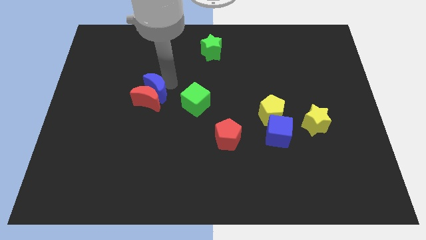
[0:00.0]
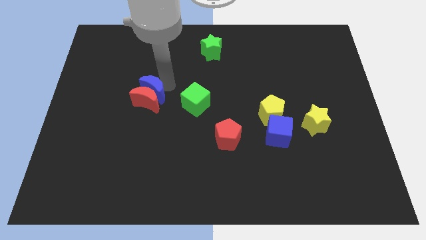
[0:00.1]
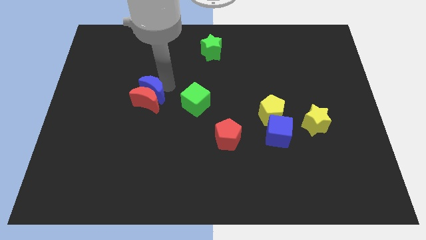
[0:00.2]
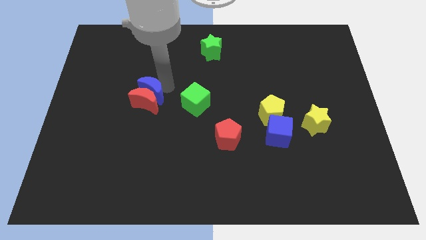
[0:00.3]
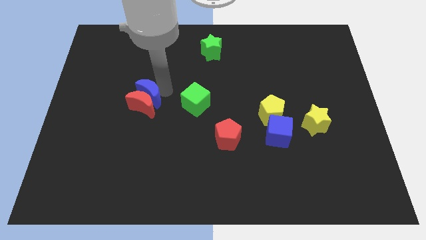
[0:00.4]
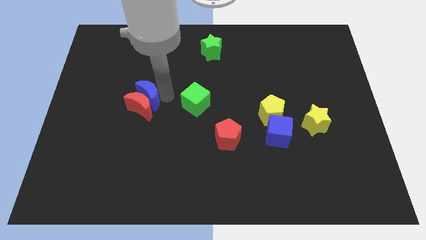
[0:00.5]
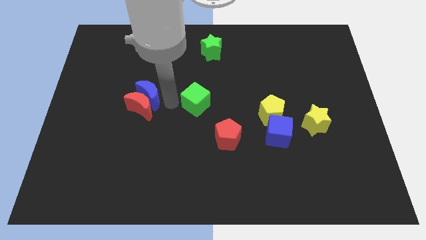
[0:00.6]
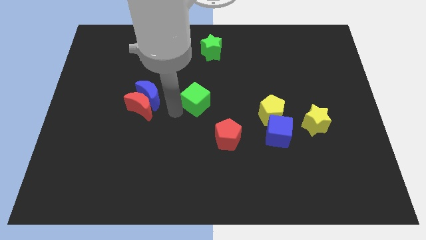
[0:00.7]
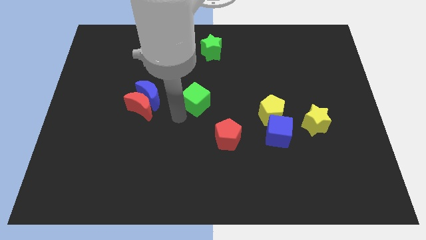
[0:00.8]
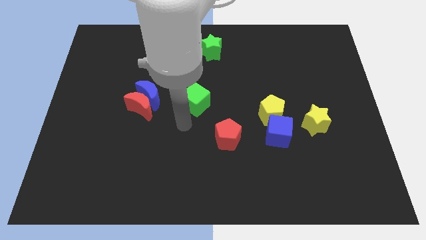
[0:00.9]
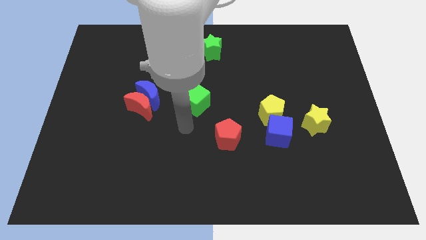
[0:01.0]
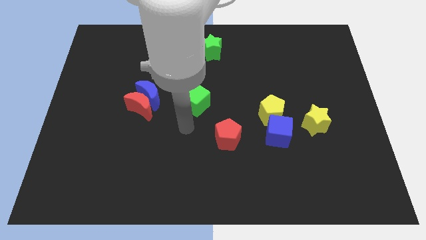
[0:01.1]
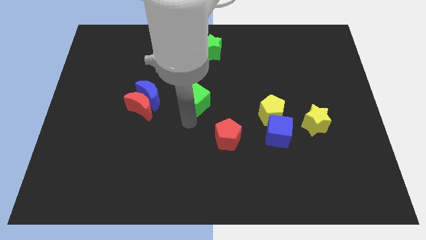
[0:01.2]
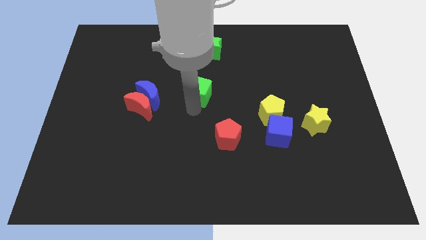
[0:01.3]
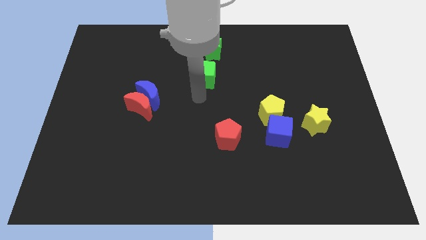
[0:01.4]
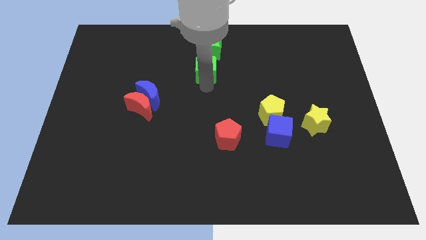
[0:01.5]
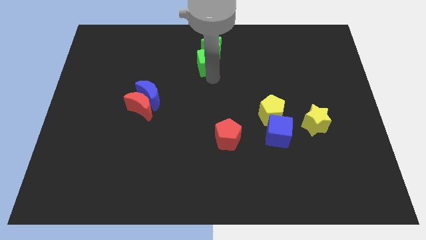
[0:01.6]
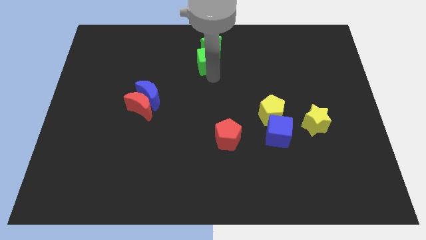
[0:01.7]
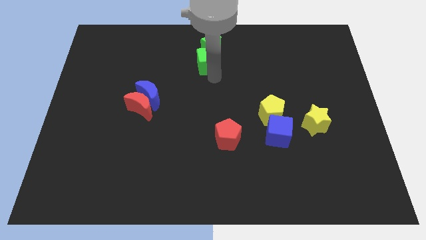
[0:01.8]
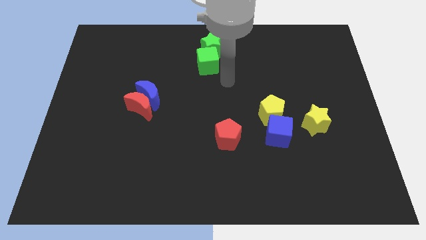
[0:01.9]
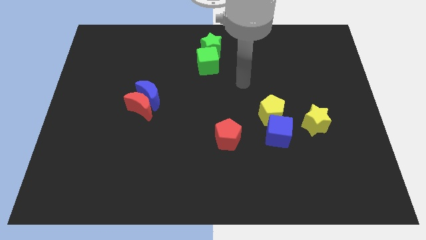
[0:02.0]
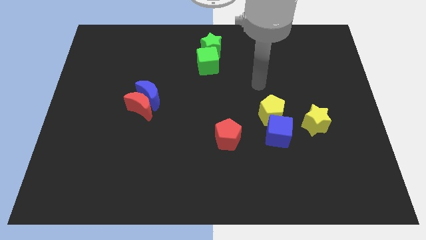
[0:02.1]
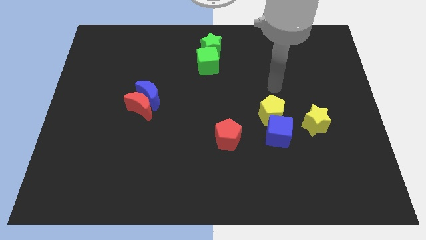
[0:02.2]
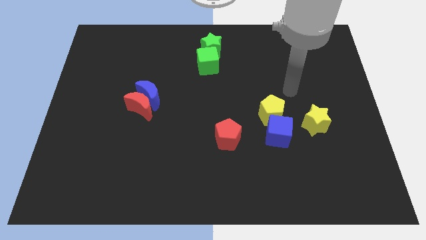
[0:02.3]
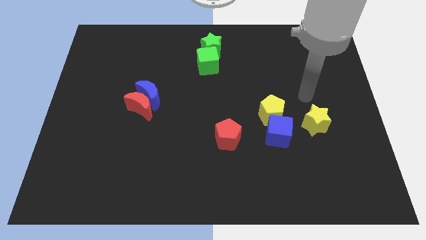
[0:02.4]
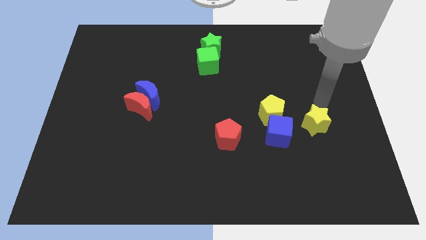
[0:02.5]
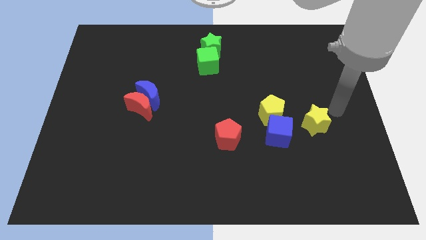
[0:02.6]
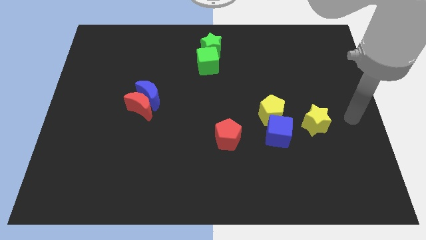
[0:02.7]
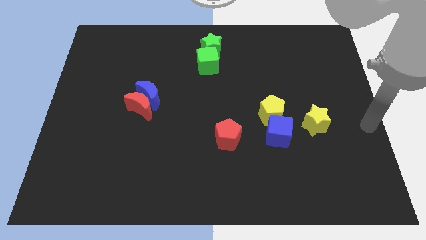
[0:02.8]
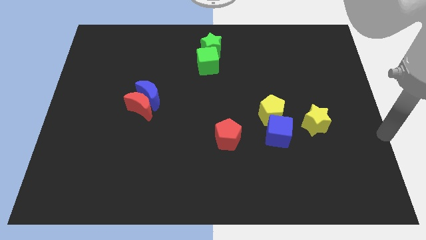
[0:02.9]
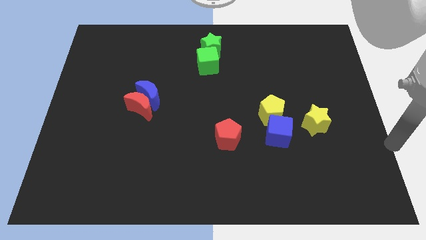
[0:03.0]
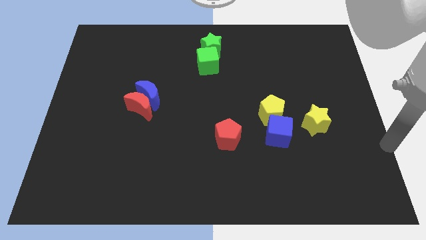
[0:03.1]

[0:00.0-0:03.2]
place green cube below the green star

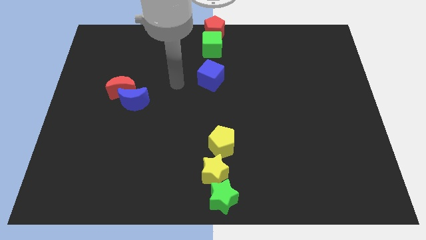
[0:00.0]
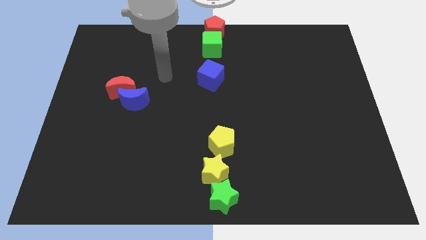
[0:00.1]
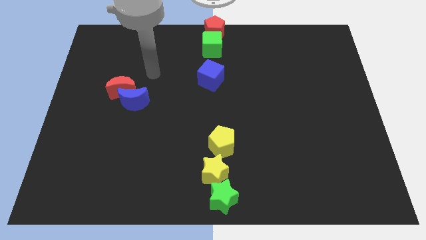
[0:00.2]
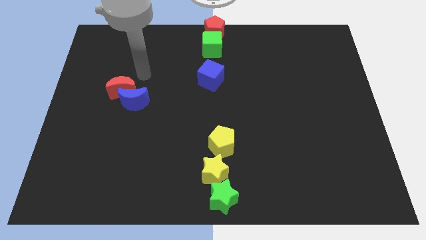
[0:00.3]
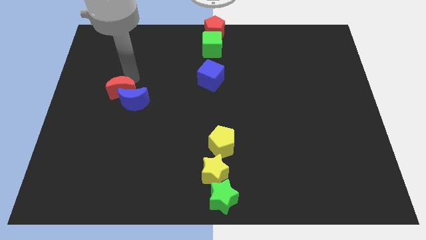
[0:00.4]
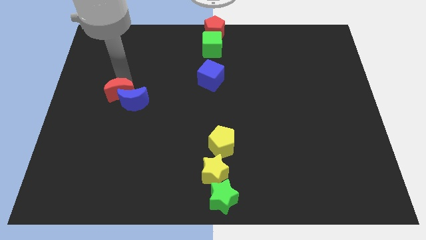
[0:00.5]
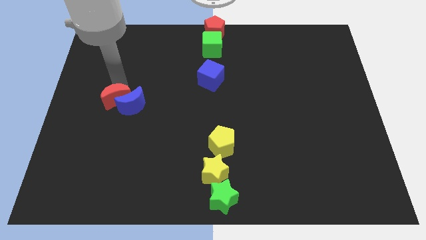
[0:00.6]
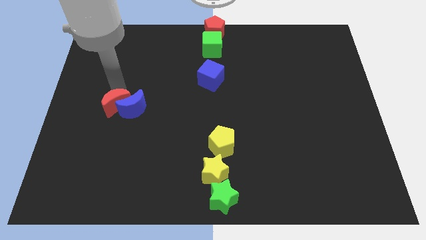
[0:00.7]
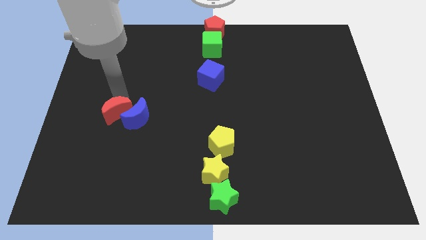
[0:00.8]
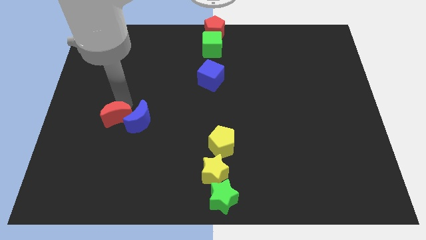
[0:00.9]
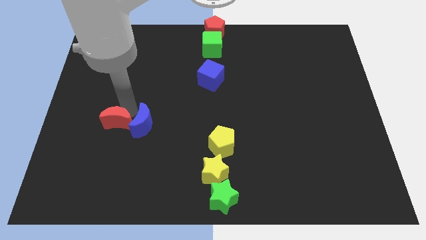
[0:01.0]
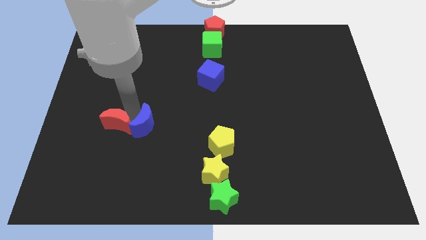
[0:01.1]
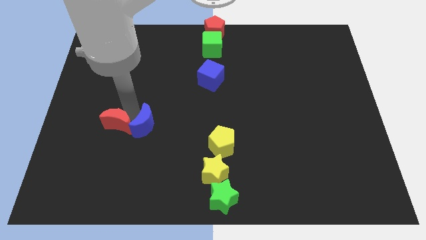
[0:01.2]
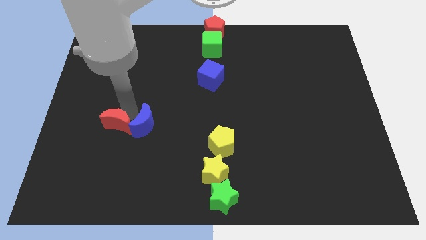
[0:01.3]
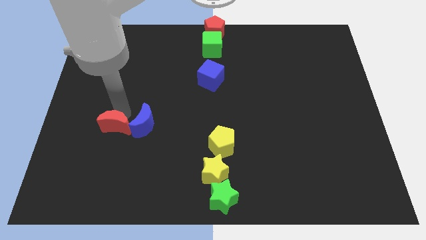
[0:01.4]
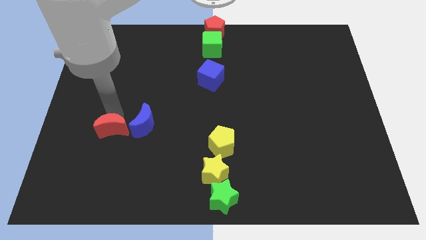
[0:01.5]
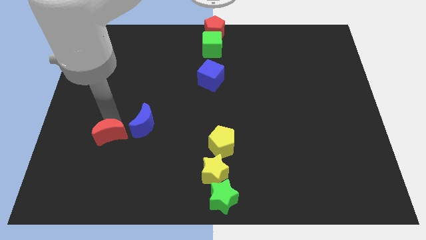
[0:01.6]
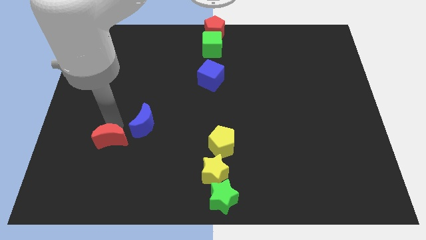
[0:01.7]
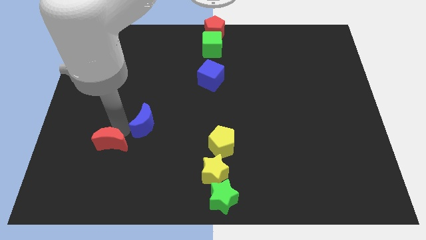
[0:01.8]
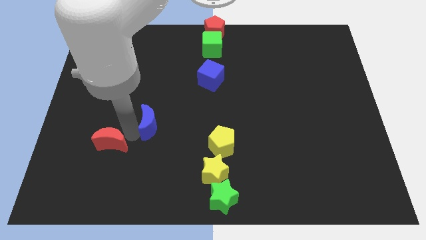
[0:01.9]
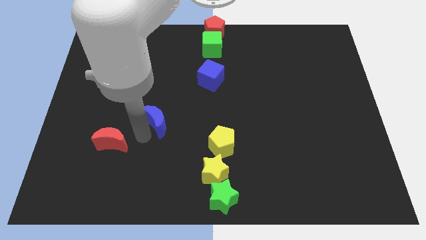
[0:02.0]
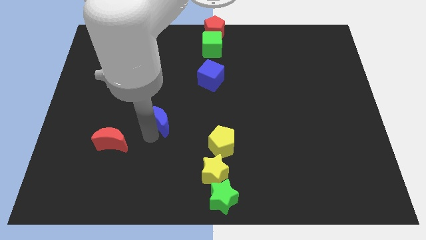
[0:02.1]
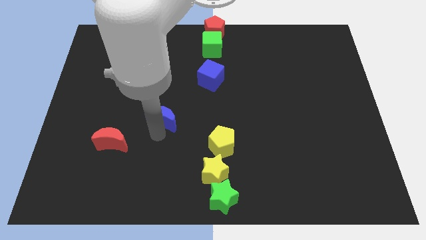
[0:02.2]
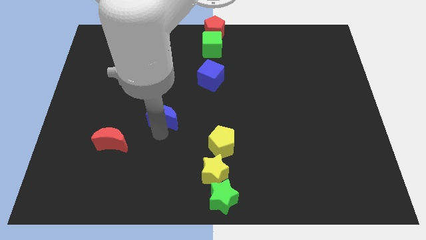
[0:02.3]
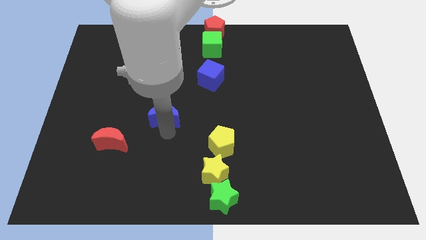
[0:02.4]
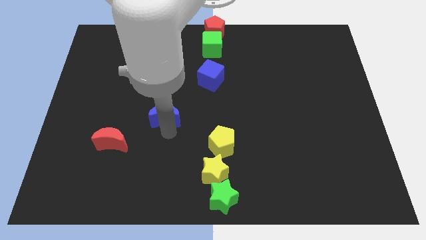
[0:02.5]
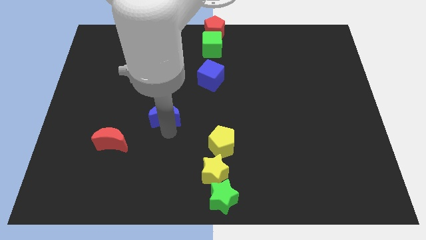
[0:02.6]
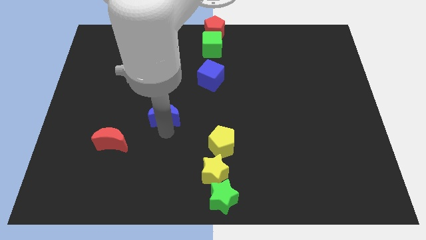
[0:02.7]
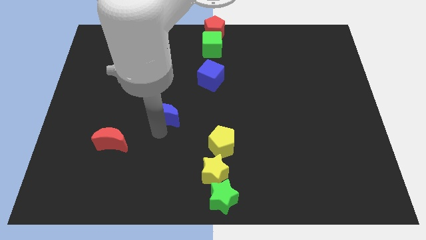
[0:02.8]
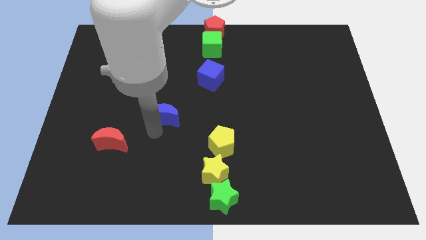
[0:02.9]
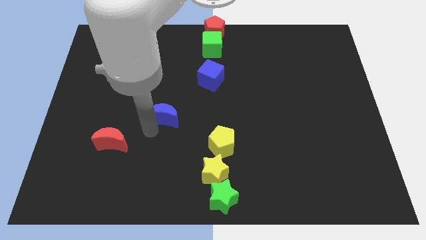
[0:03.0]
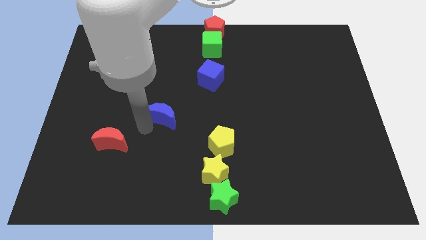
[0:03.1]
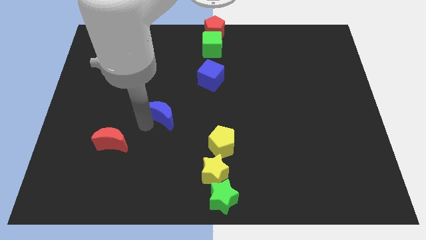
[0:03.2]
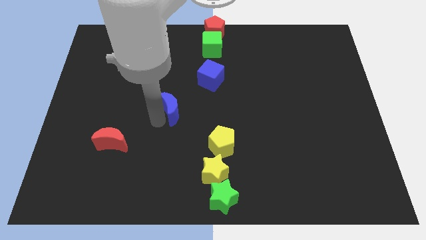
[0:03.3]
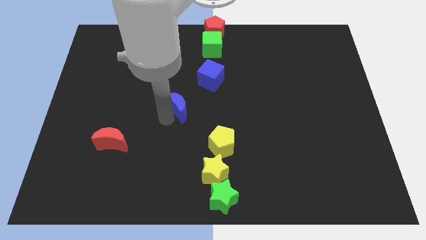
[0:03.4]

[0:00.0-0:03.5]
separate the blue crescent from the red crescent

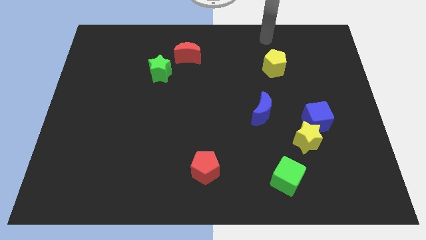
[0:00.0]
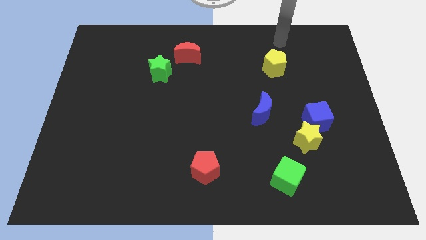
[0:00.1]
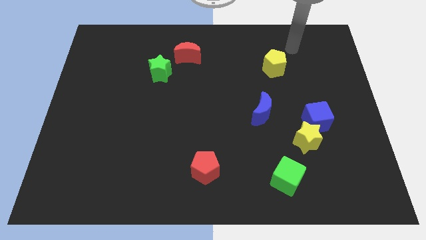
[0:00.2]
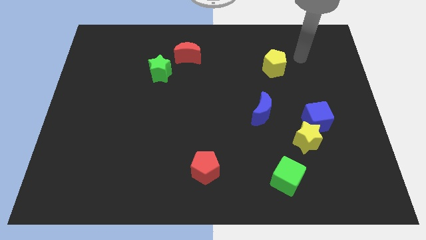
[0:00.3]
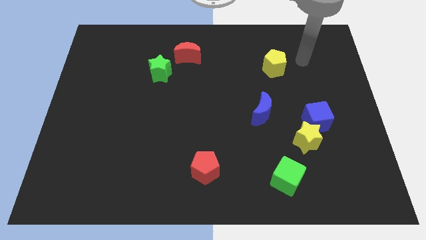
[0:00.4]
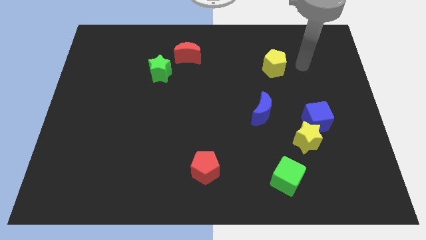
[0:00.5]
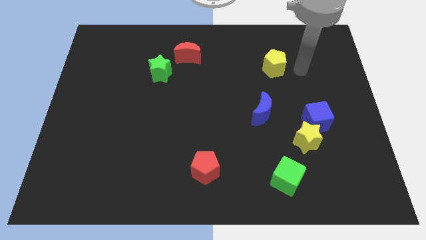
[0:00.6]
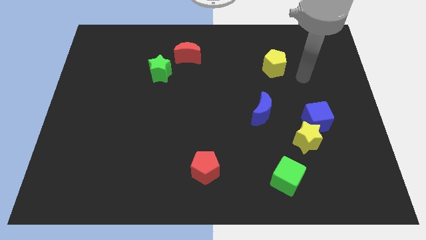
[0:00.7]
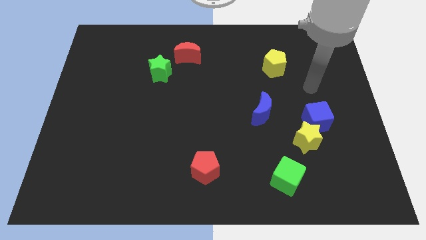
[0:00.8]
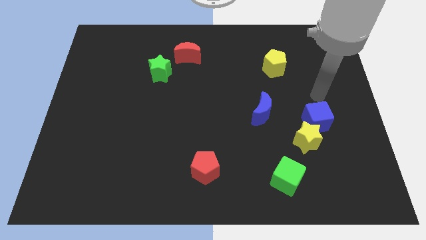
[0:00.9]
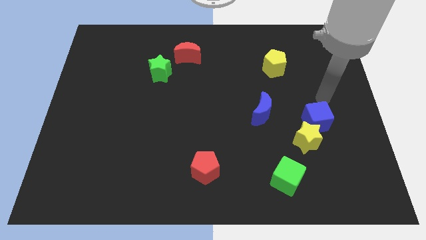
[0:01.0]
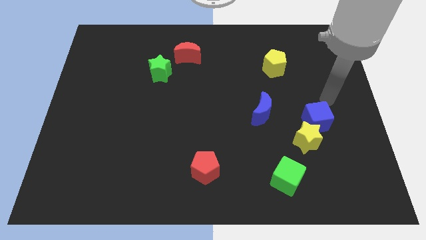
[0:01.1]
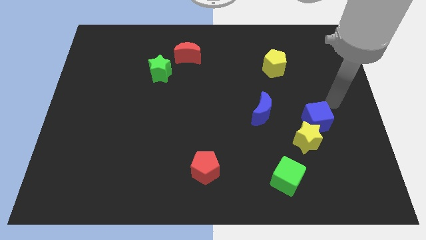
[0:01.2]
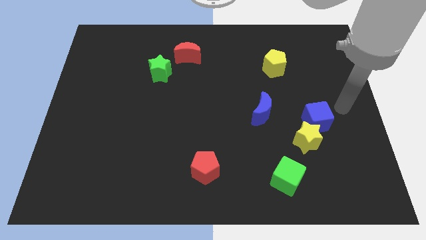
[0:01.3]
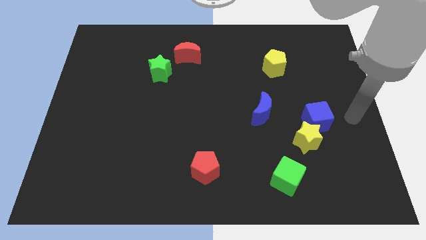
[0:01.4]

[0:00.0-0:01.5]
move your arm and point to the right of blue cube

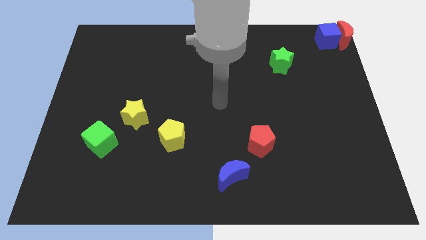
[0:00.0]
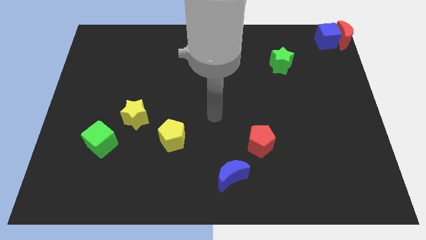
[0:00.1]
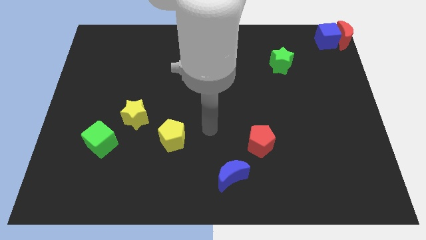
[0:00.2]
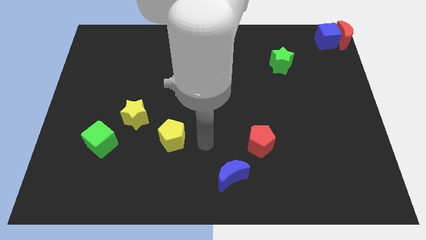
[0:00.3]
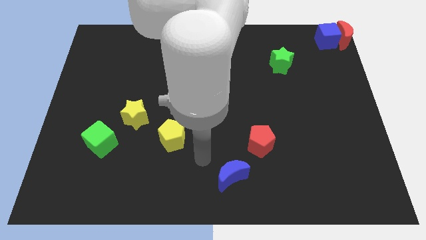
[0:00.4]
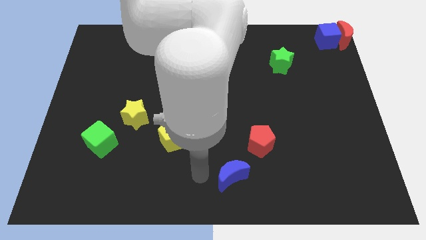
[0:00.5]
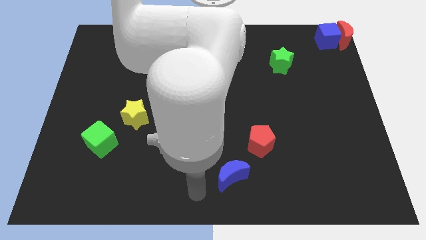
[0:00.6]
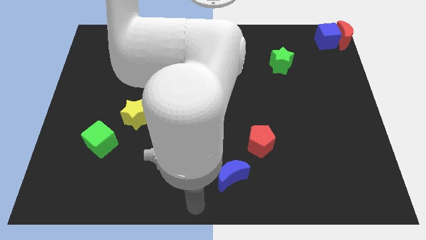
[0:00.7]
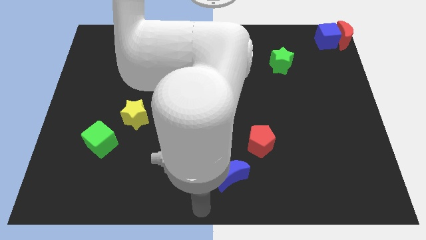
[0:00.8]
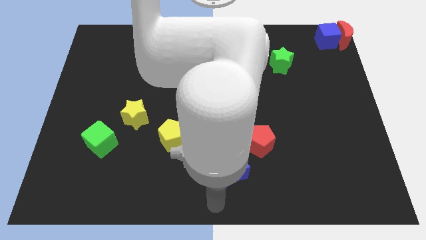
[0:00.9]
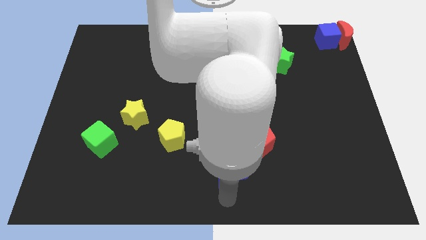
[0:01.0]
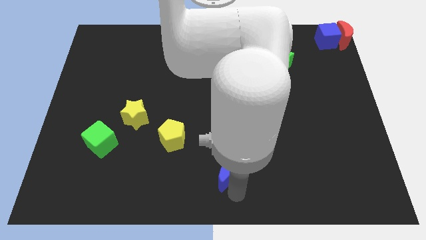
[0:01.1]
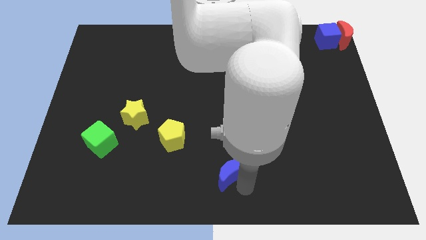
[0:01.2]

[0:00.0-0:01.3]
point your arm towards the bottom side of the blue moon
